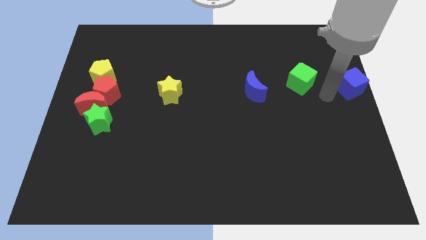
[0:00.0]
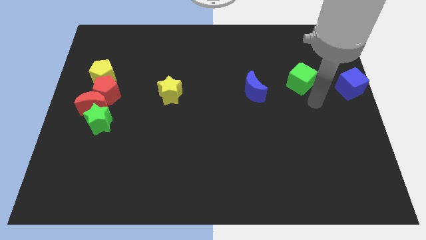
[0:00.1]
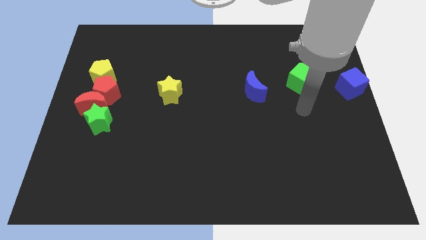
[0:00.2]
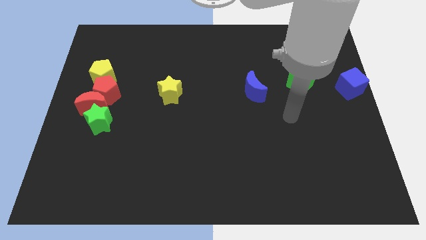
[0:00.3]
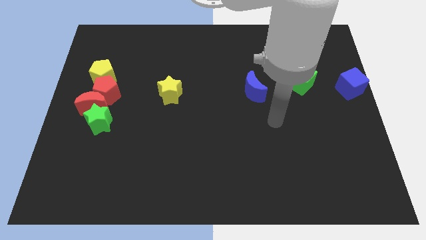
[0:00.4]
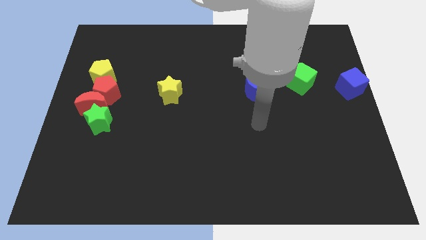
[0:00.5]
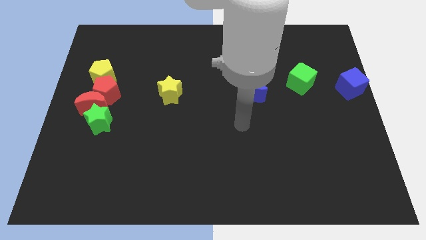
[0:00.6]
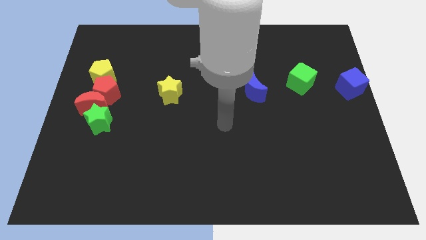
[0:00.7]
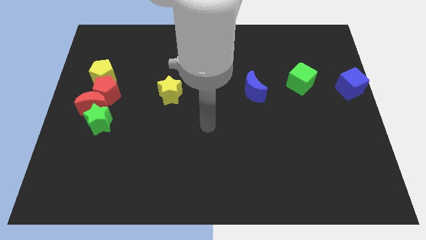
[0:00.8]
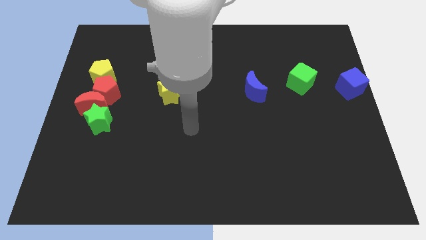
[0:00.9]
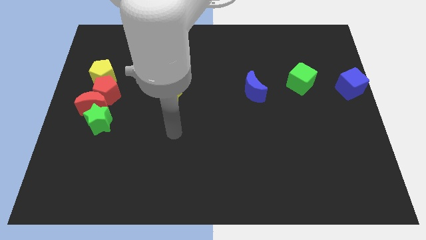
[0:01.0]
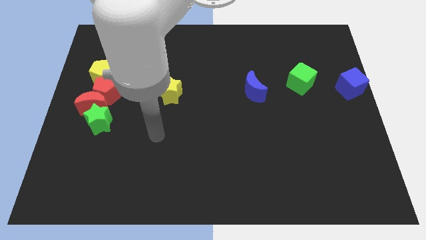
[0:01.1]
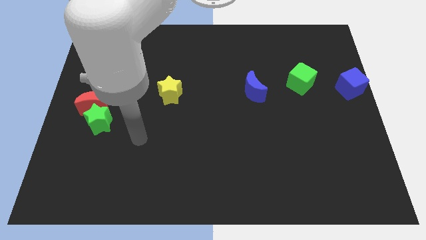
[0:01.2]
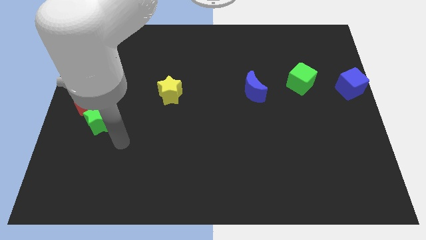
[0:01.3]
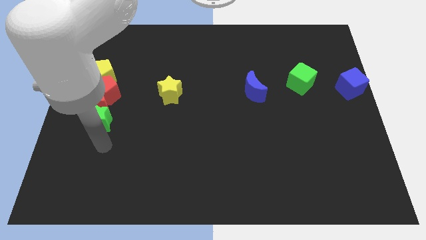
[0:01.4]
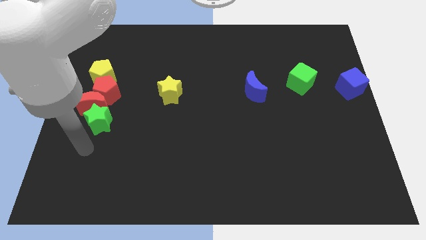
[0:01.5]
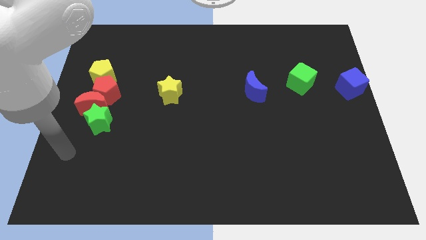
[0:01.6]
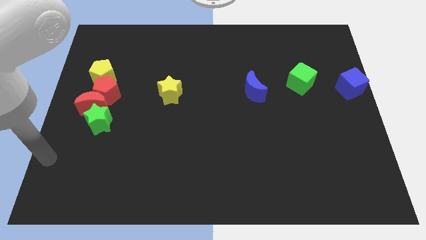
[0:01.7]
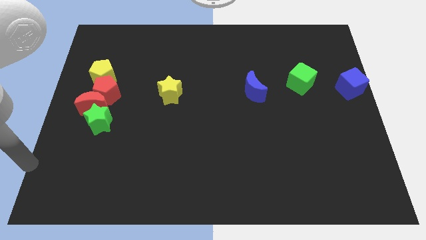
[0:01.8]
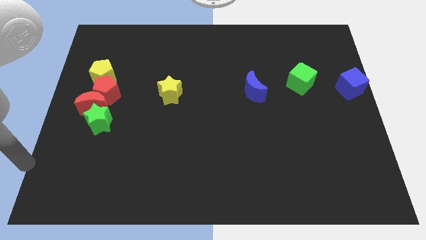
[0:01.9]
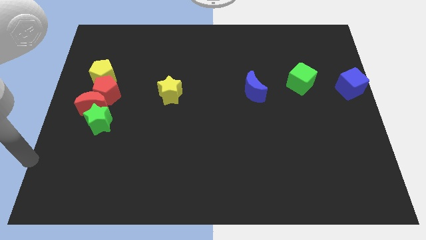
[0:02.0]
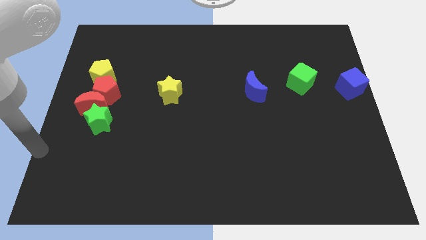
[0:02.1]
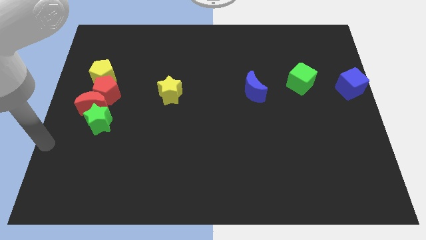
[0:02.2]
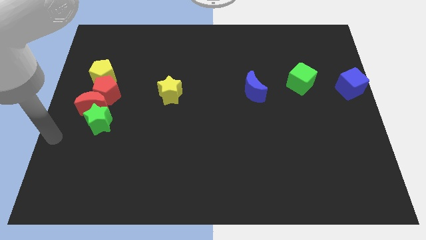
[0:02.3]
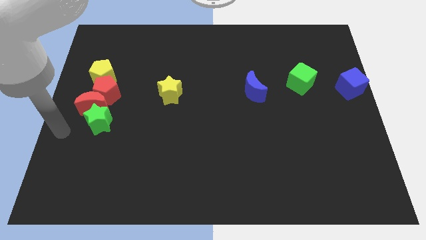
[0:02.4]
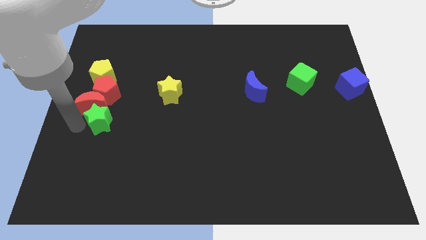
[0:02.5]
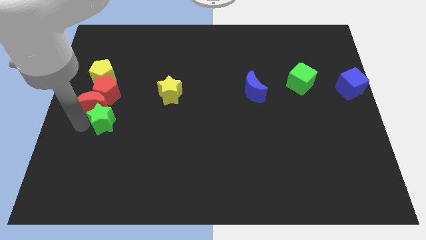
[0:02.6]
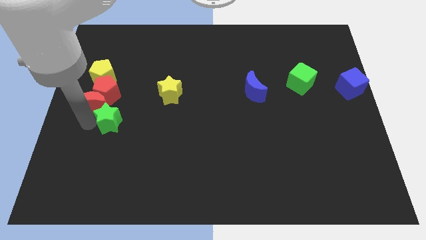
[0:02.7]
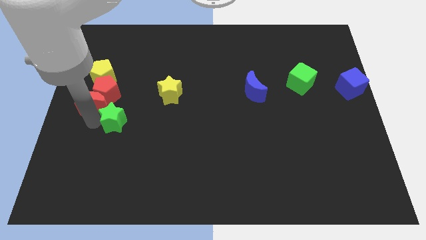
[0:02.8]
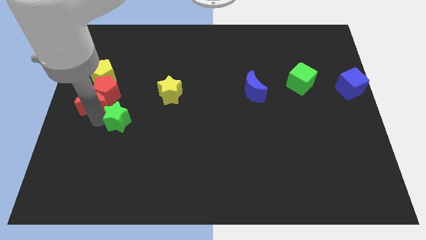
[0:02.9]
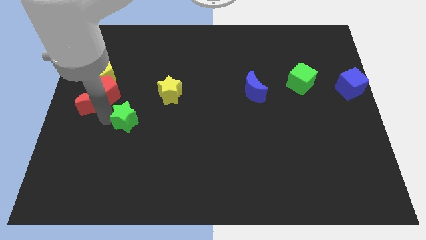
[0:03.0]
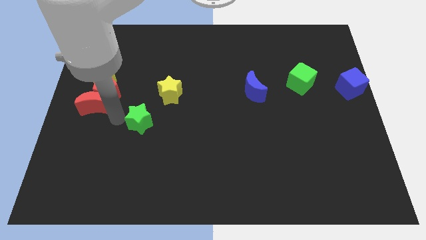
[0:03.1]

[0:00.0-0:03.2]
push the green star left below the yellow star

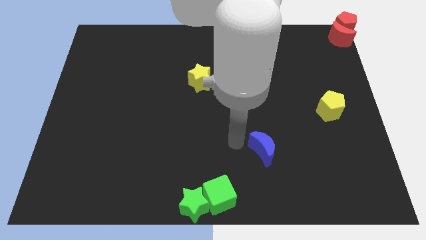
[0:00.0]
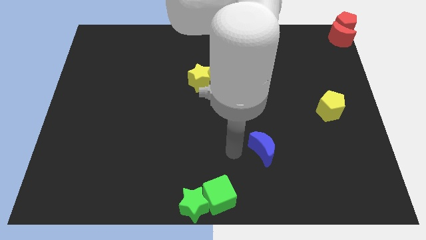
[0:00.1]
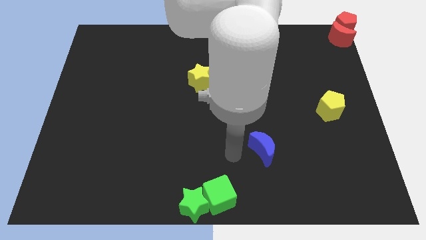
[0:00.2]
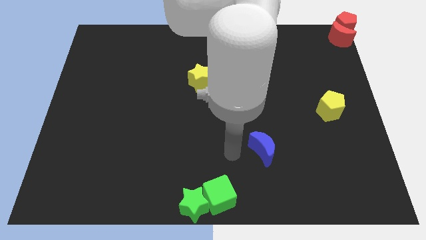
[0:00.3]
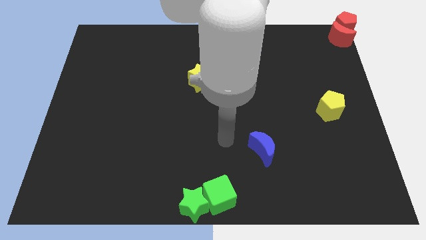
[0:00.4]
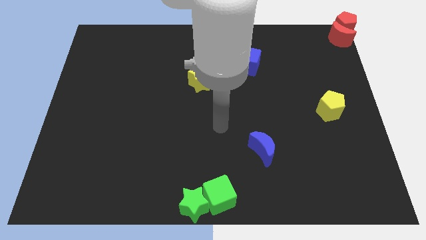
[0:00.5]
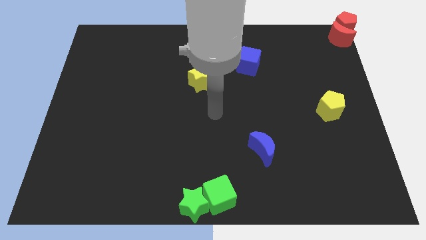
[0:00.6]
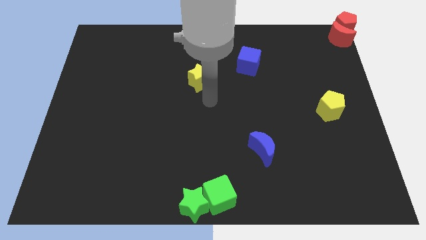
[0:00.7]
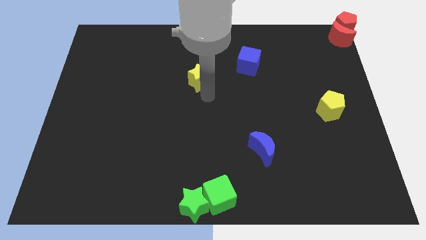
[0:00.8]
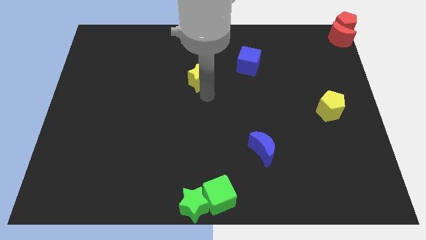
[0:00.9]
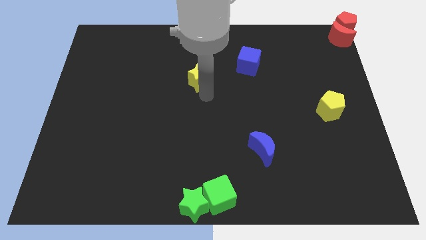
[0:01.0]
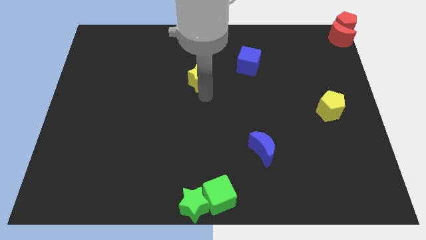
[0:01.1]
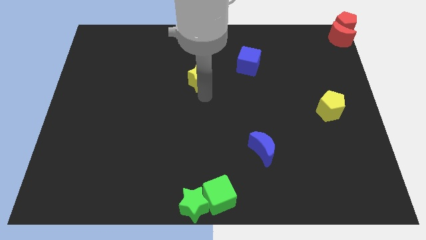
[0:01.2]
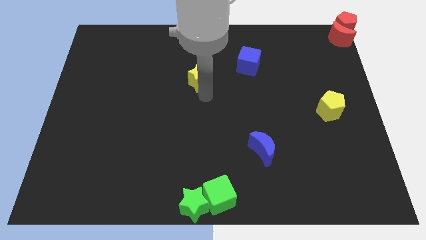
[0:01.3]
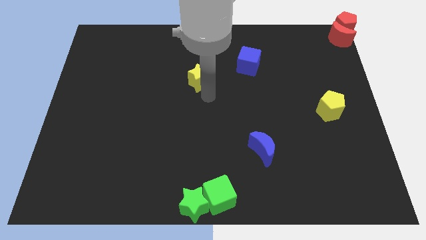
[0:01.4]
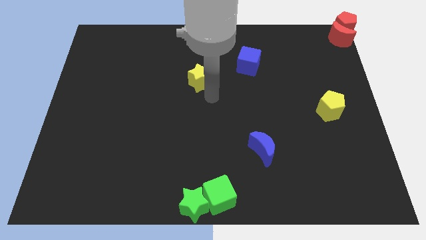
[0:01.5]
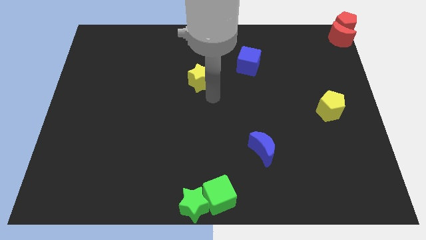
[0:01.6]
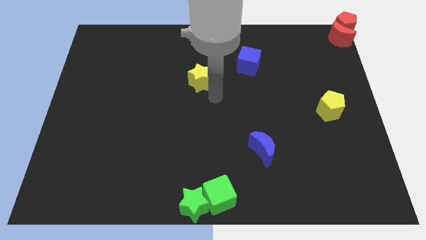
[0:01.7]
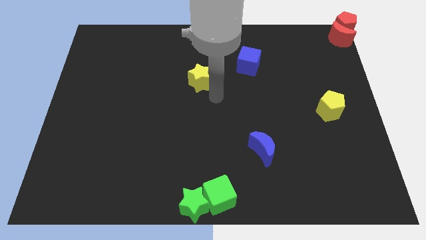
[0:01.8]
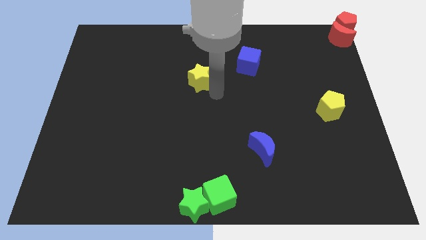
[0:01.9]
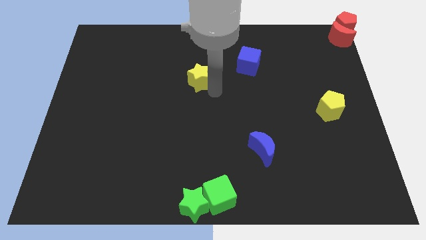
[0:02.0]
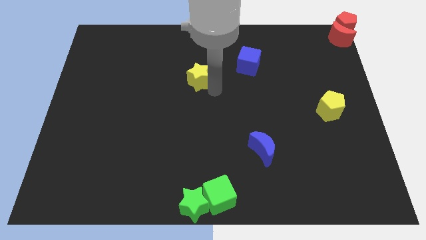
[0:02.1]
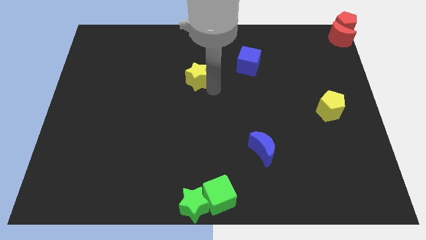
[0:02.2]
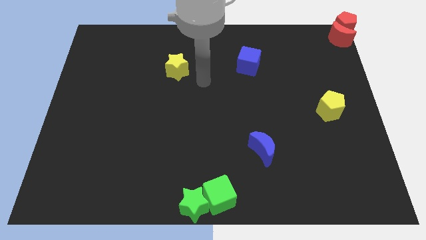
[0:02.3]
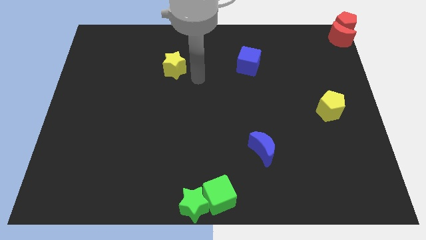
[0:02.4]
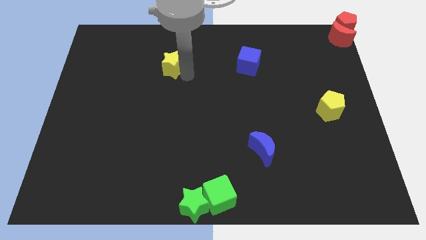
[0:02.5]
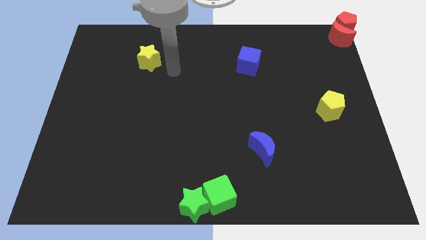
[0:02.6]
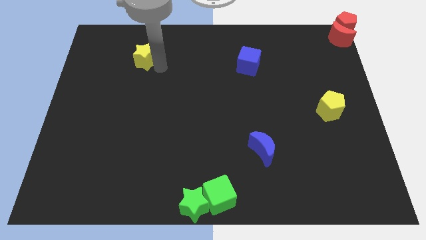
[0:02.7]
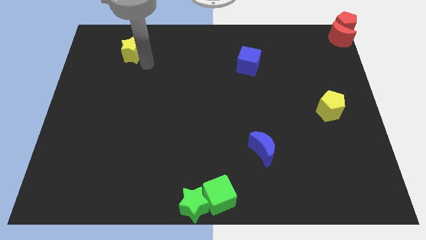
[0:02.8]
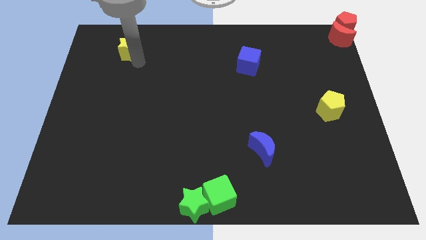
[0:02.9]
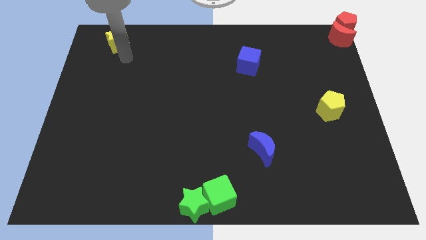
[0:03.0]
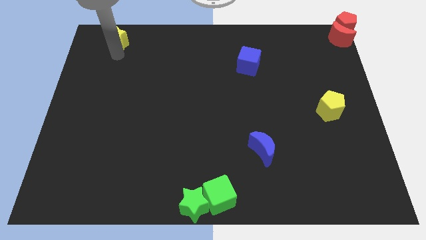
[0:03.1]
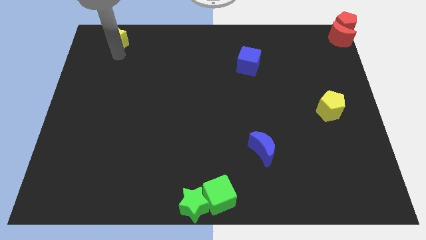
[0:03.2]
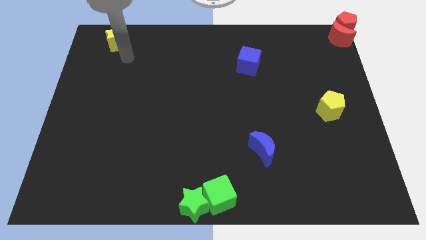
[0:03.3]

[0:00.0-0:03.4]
move the yellow star to the top left to the board

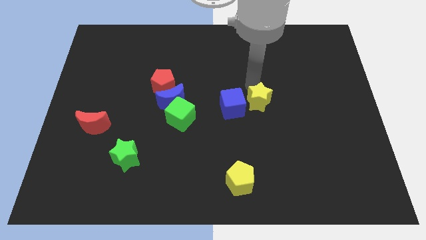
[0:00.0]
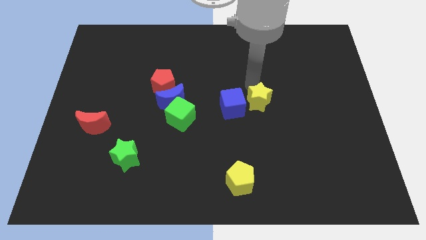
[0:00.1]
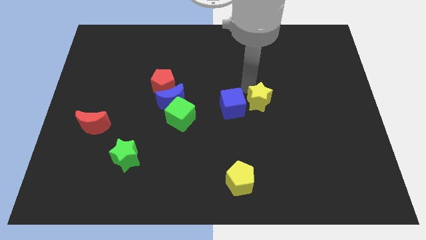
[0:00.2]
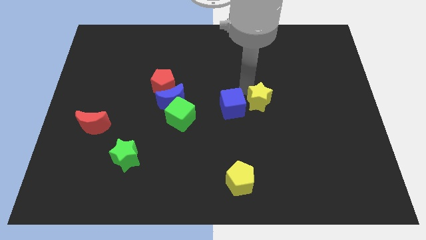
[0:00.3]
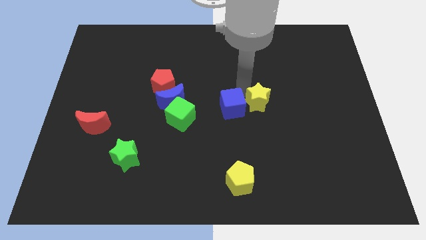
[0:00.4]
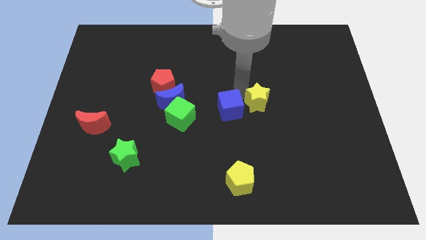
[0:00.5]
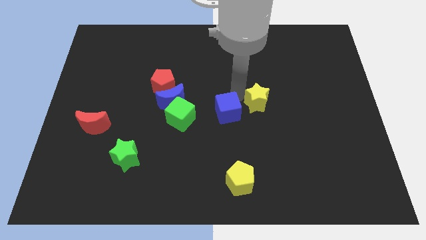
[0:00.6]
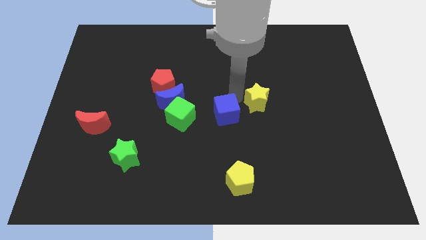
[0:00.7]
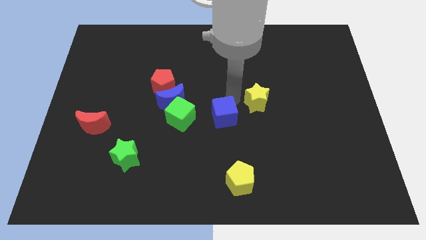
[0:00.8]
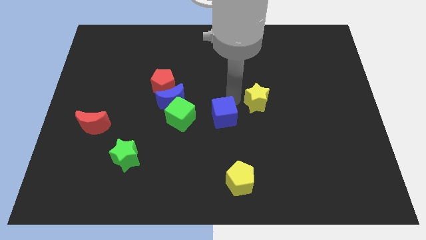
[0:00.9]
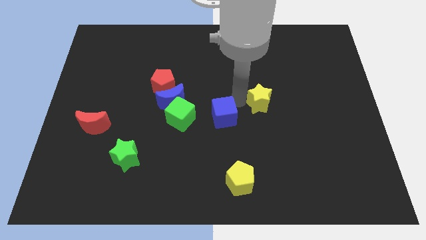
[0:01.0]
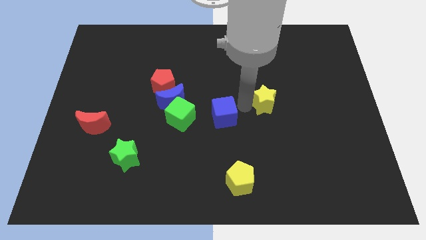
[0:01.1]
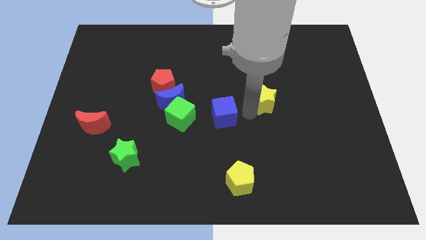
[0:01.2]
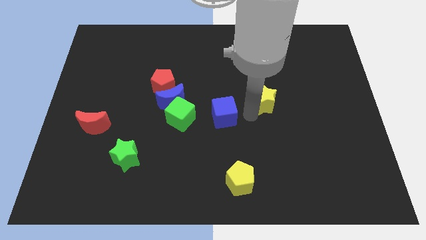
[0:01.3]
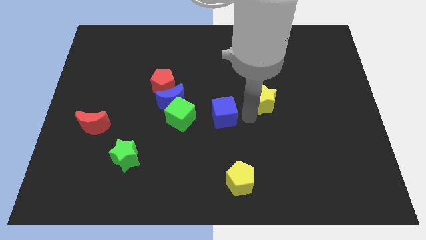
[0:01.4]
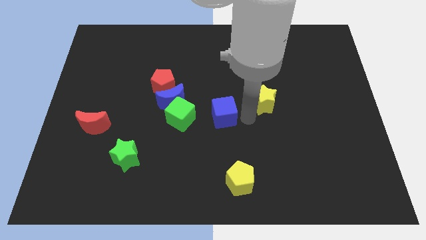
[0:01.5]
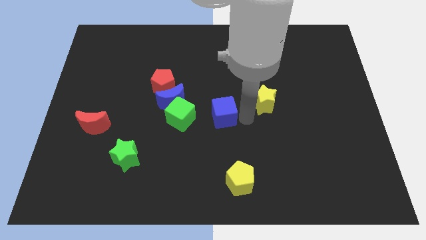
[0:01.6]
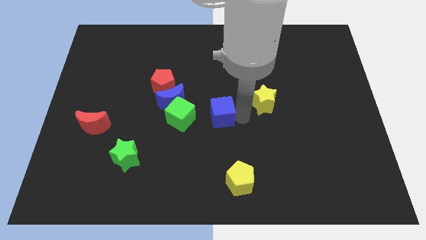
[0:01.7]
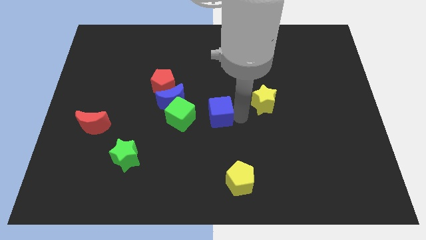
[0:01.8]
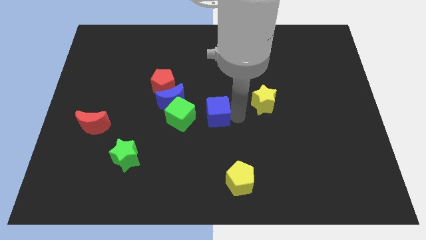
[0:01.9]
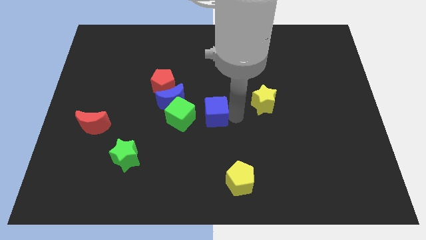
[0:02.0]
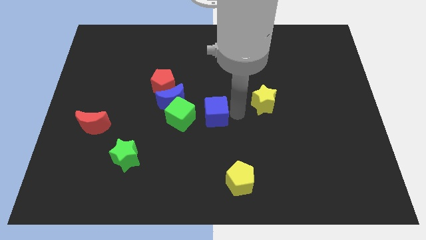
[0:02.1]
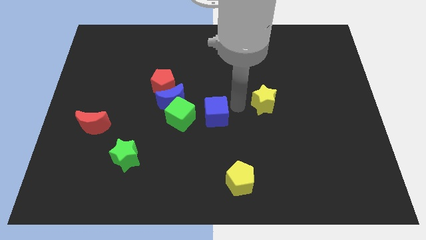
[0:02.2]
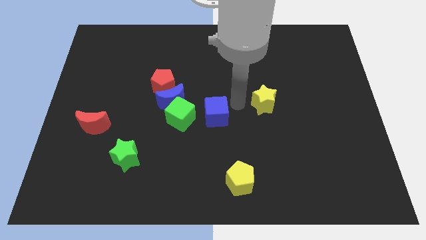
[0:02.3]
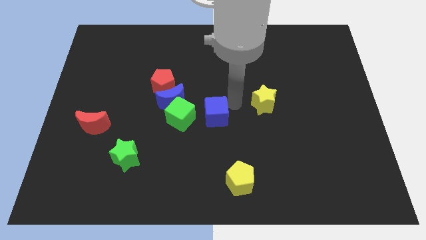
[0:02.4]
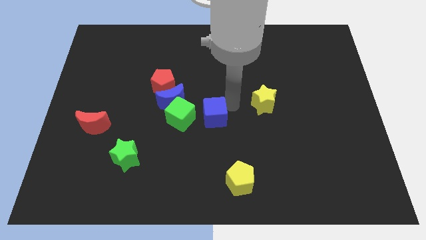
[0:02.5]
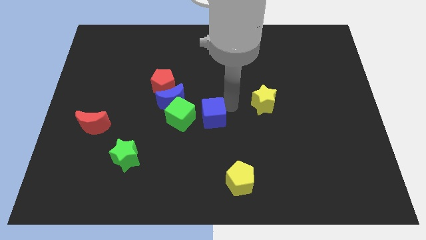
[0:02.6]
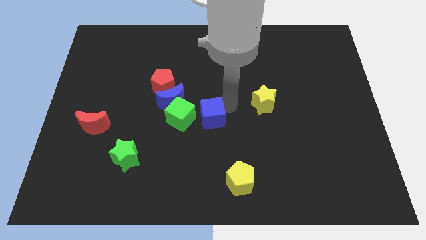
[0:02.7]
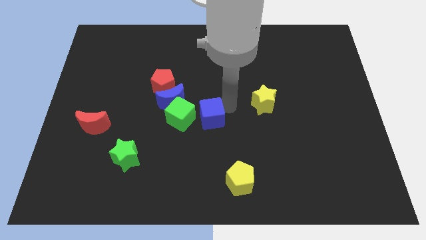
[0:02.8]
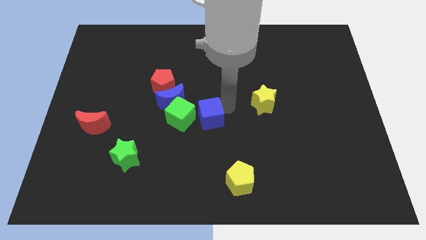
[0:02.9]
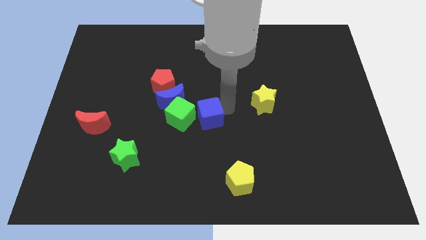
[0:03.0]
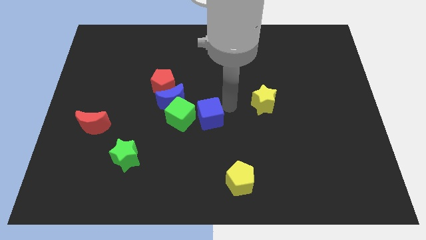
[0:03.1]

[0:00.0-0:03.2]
move the blue cube right to the green cube
